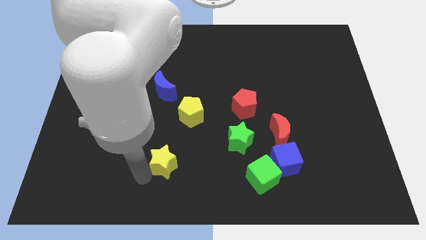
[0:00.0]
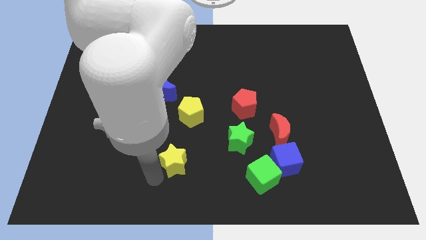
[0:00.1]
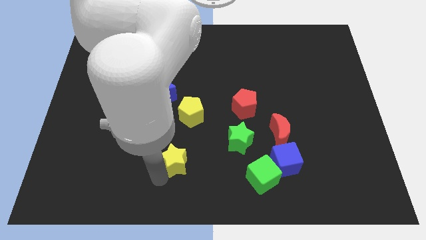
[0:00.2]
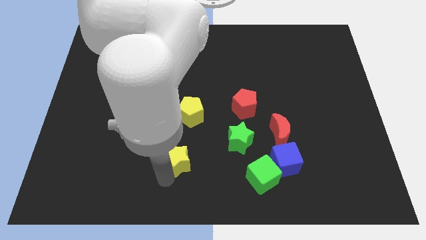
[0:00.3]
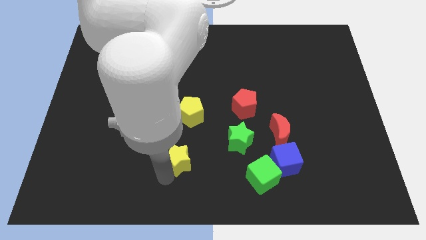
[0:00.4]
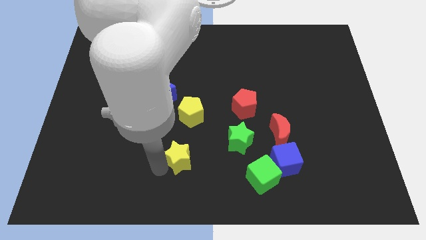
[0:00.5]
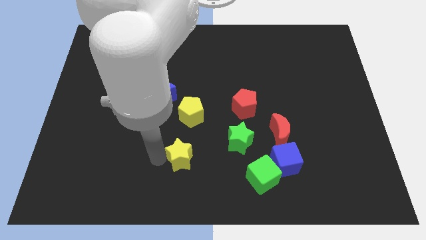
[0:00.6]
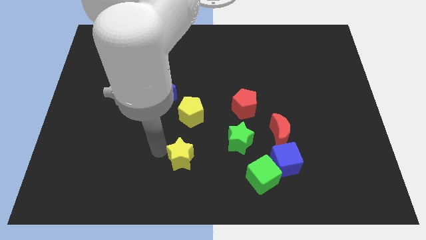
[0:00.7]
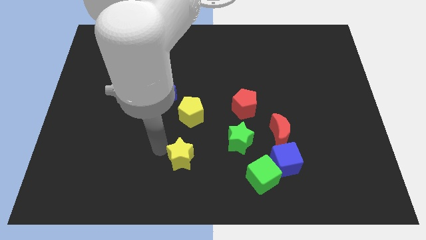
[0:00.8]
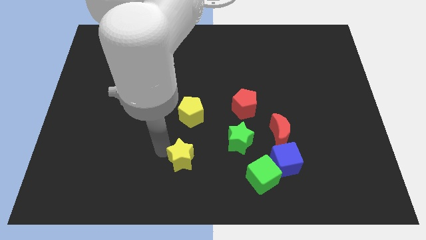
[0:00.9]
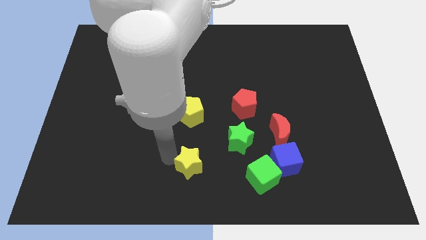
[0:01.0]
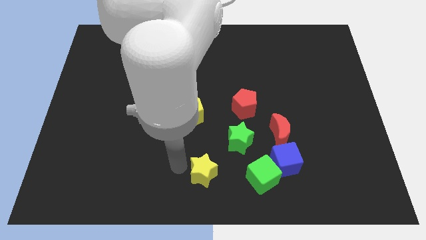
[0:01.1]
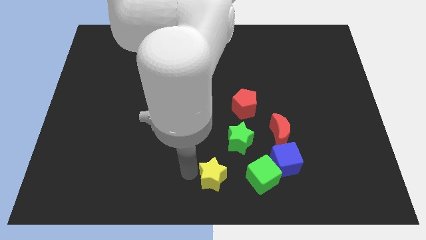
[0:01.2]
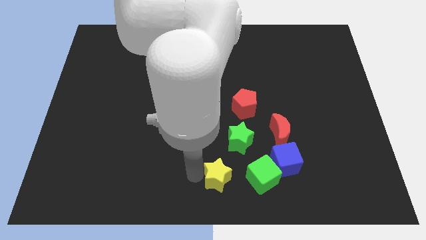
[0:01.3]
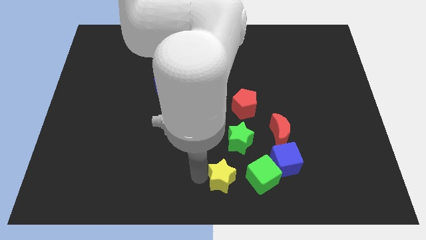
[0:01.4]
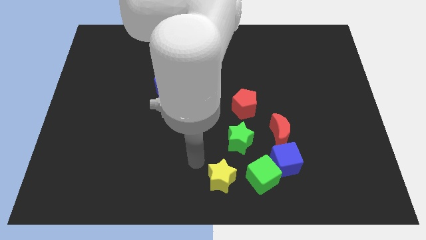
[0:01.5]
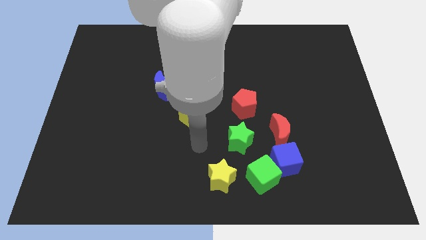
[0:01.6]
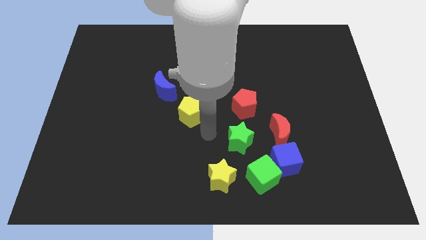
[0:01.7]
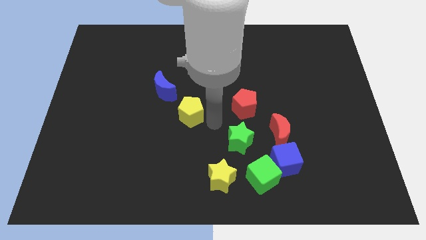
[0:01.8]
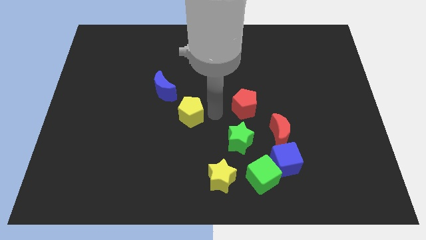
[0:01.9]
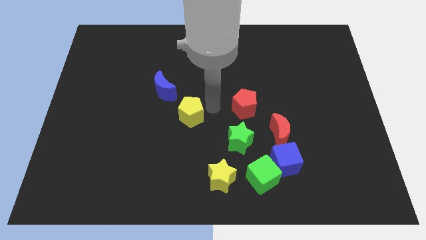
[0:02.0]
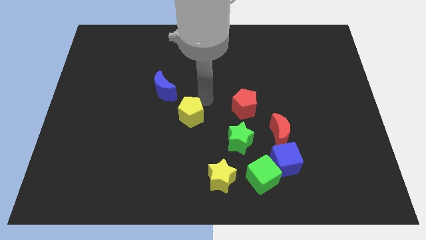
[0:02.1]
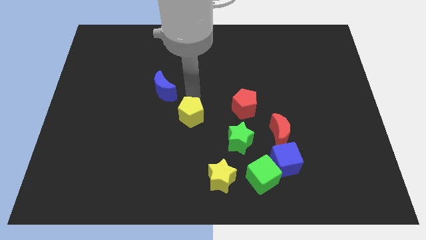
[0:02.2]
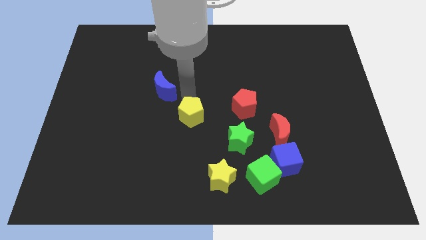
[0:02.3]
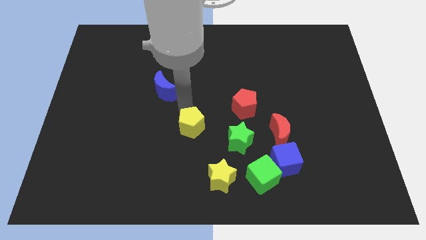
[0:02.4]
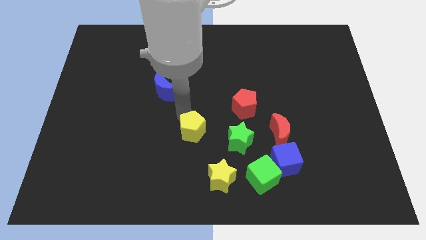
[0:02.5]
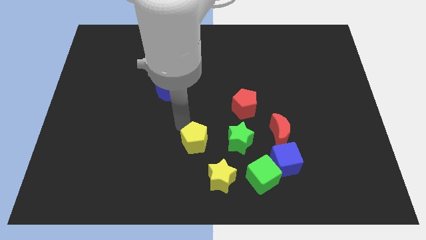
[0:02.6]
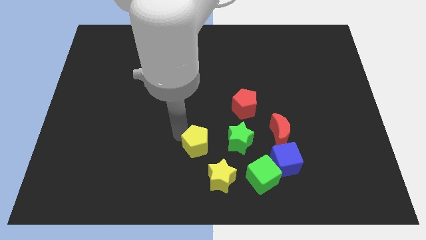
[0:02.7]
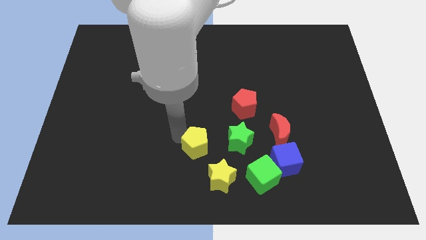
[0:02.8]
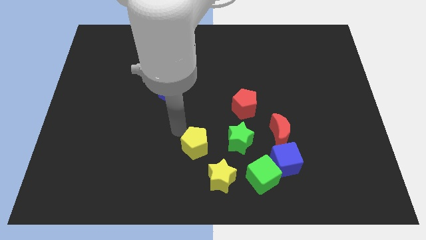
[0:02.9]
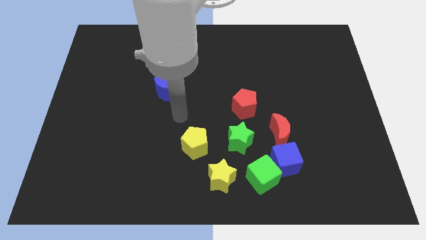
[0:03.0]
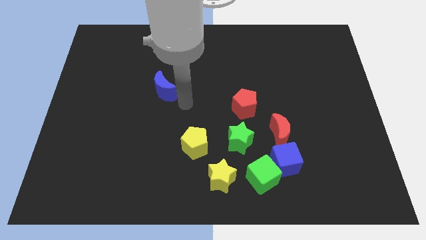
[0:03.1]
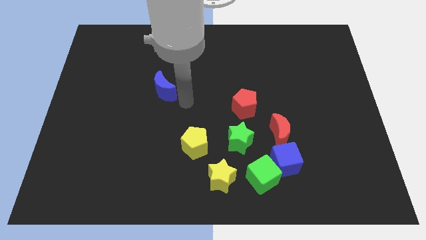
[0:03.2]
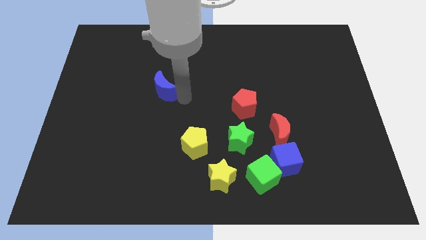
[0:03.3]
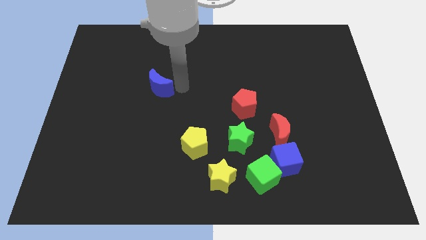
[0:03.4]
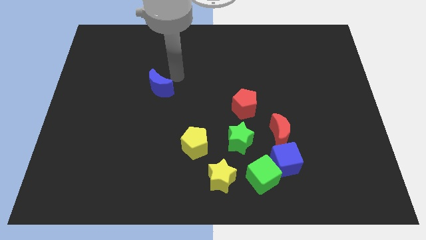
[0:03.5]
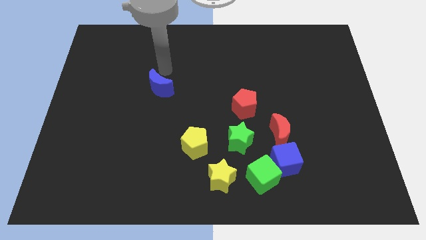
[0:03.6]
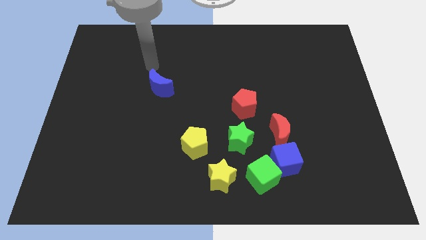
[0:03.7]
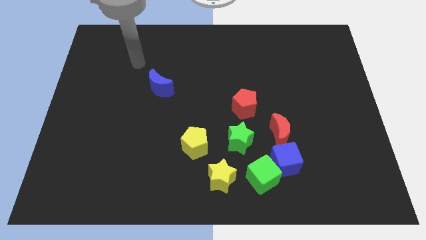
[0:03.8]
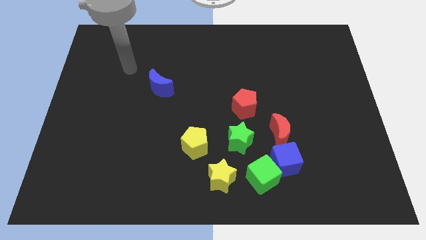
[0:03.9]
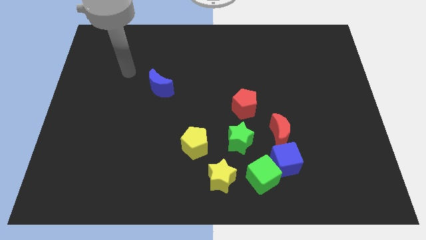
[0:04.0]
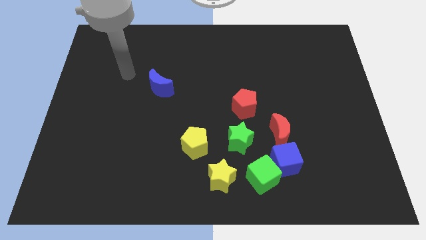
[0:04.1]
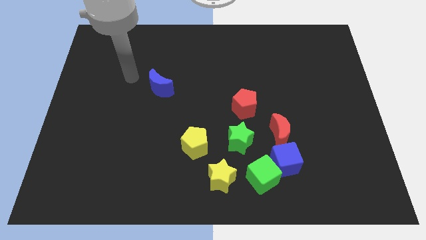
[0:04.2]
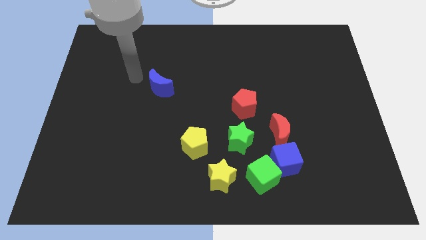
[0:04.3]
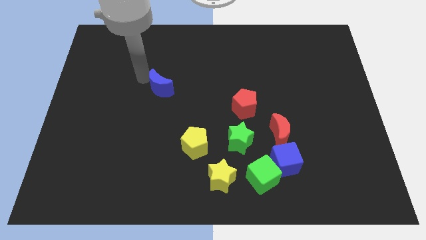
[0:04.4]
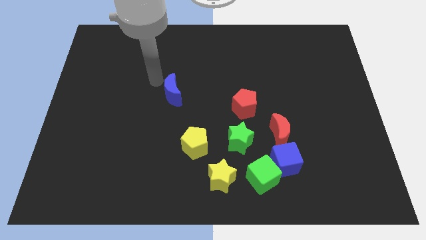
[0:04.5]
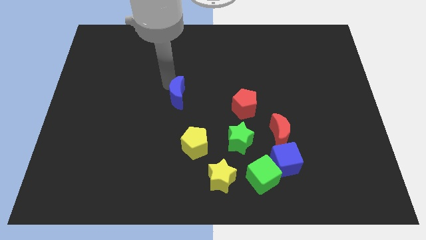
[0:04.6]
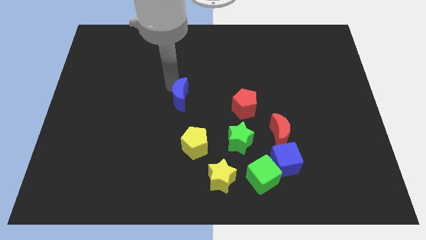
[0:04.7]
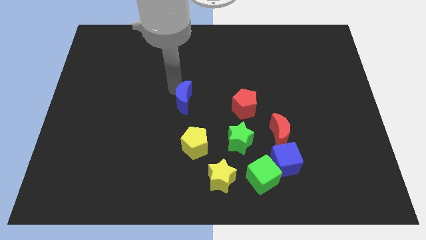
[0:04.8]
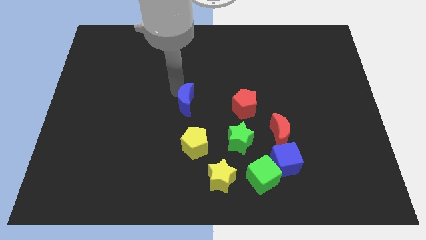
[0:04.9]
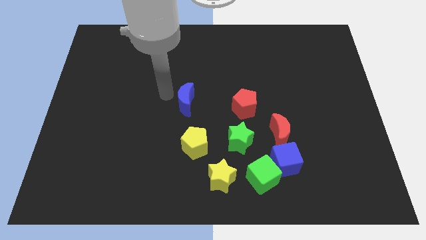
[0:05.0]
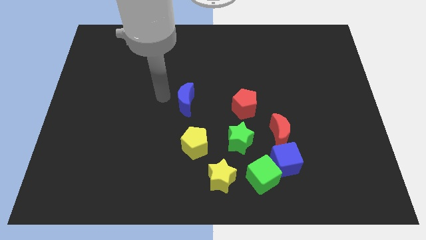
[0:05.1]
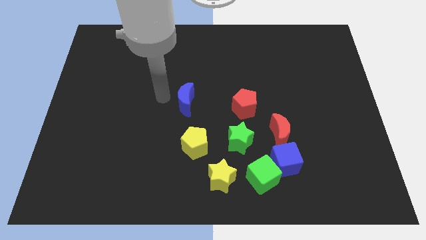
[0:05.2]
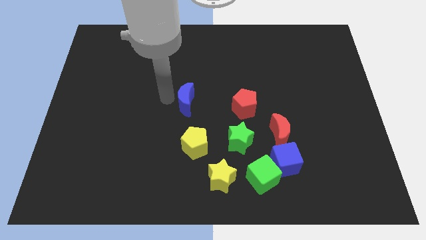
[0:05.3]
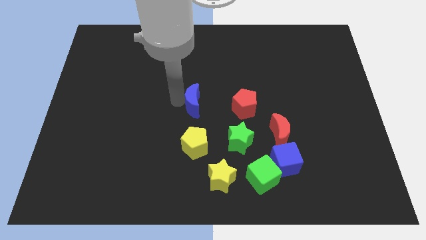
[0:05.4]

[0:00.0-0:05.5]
push the yellow pentagon left to the green star

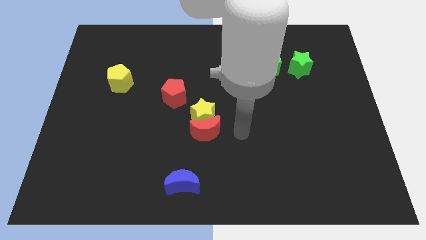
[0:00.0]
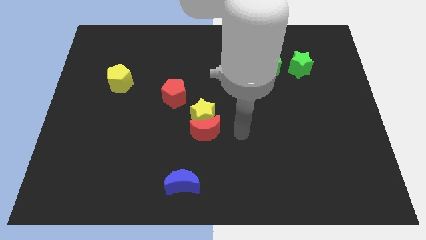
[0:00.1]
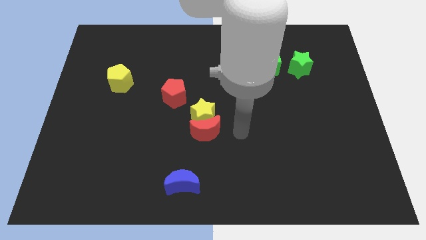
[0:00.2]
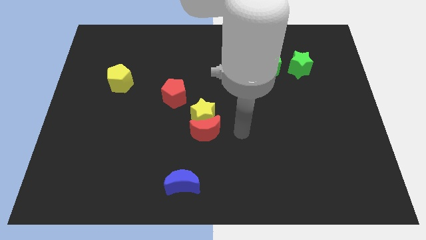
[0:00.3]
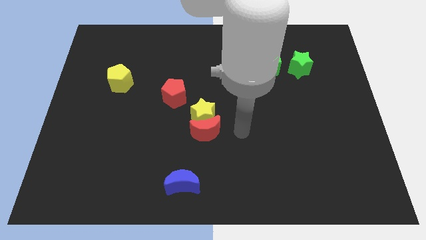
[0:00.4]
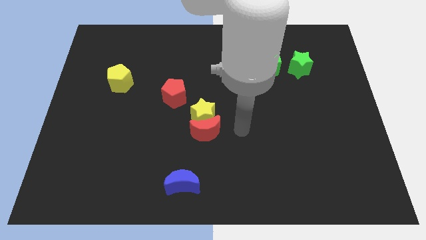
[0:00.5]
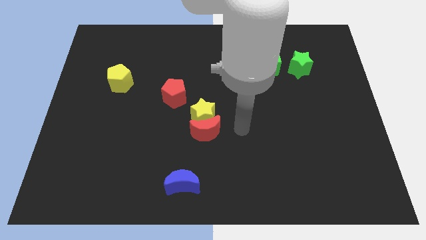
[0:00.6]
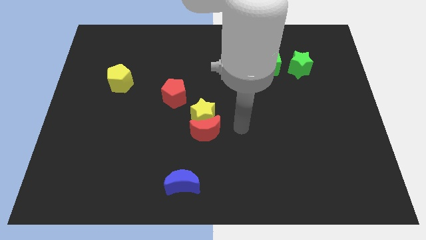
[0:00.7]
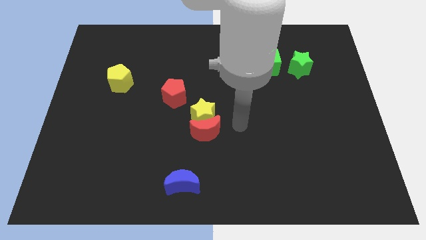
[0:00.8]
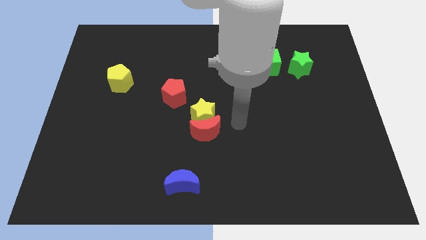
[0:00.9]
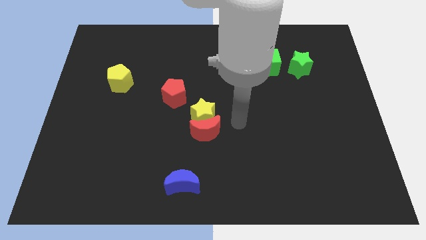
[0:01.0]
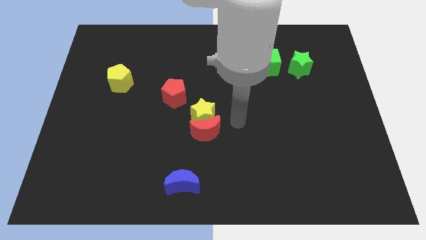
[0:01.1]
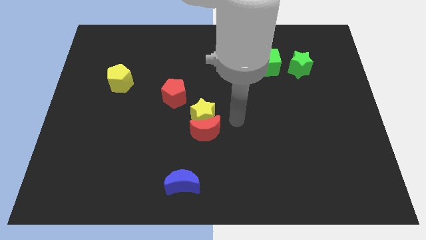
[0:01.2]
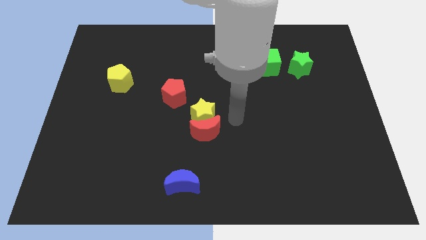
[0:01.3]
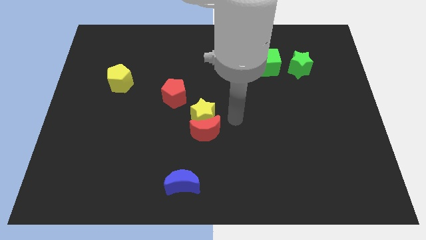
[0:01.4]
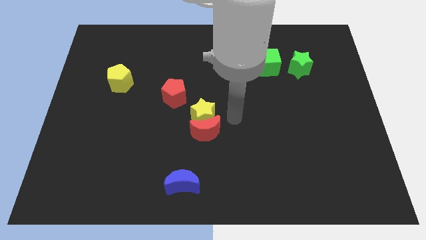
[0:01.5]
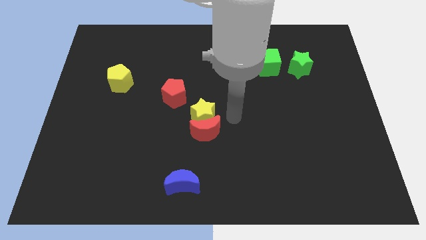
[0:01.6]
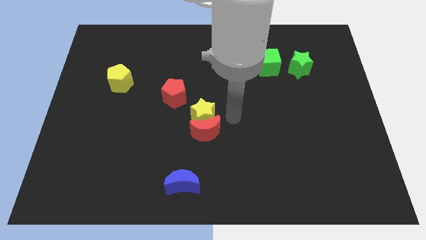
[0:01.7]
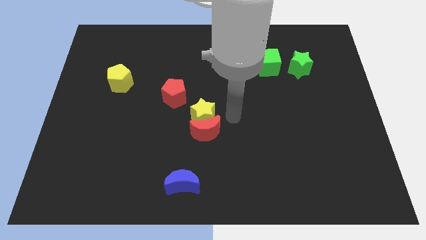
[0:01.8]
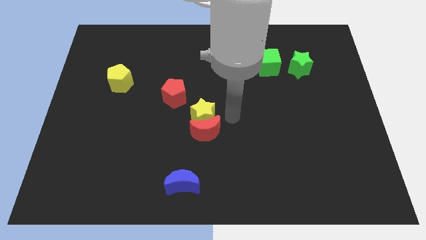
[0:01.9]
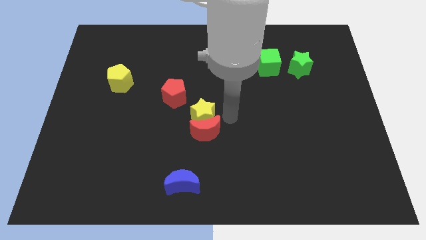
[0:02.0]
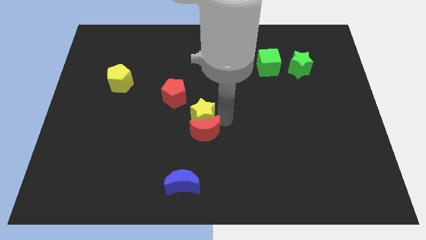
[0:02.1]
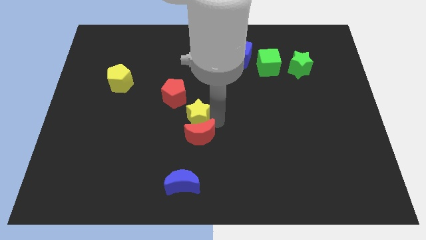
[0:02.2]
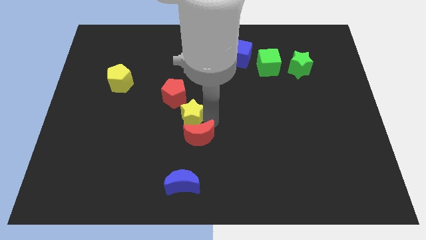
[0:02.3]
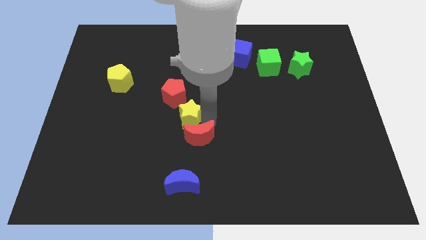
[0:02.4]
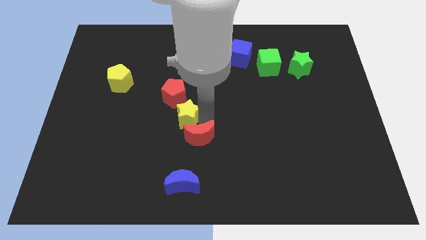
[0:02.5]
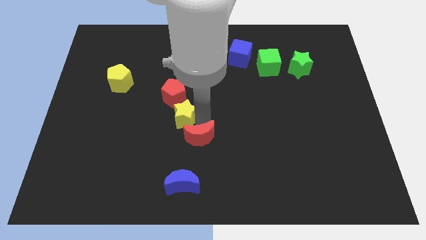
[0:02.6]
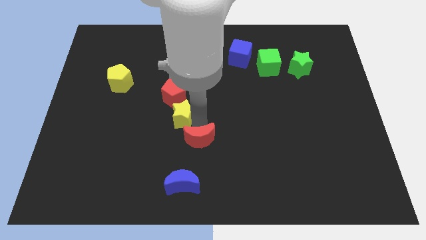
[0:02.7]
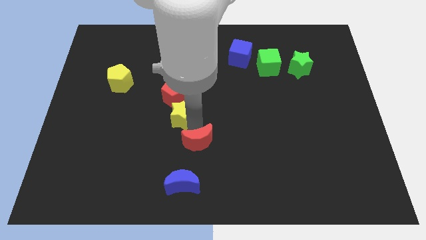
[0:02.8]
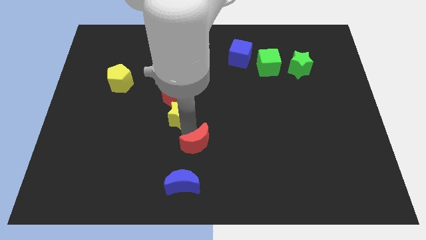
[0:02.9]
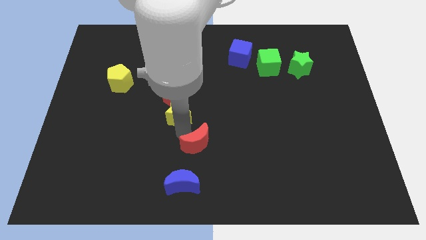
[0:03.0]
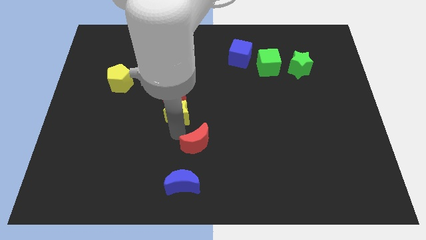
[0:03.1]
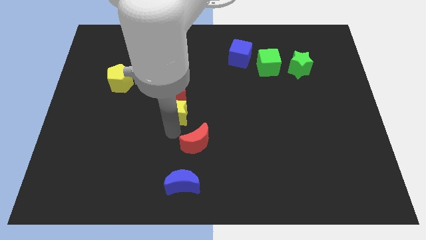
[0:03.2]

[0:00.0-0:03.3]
push yellow star below red pentagon
